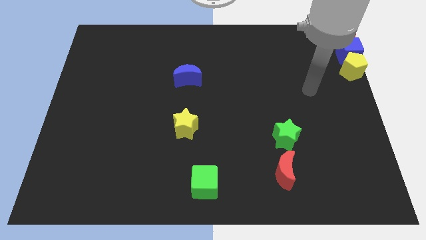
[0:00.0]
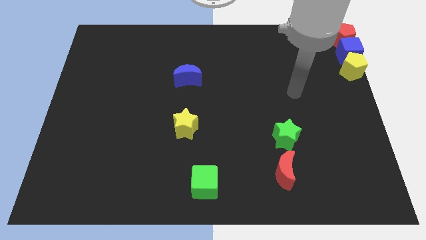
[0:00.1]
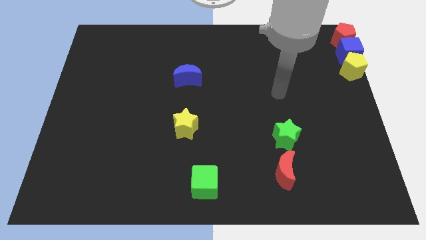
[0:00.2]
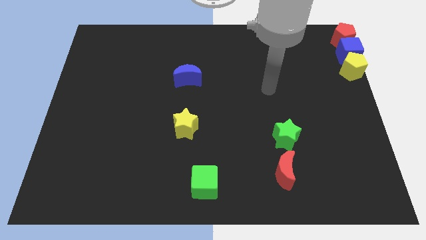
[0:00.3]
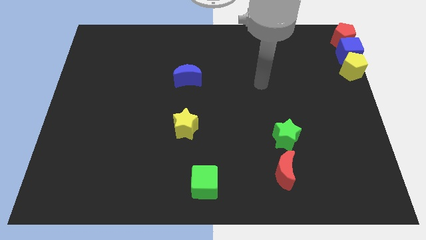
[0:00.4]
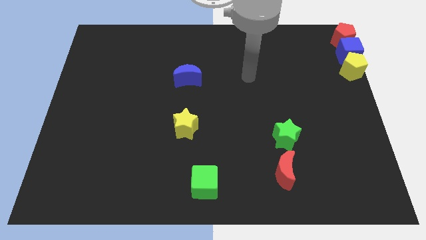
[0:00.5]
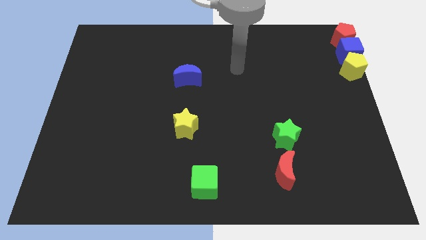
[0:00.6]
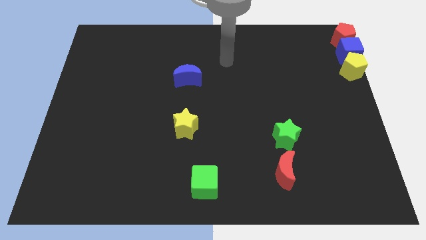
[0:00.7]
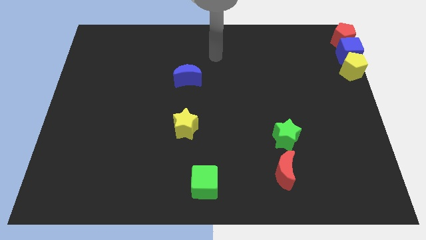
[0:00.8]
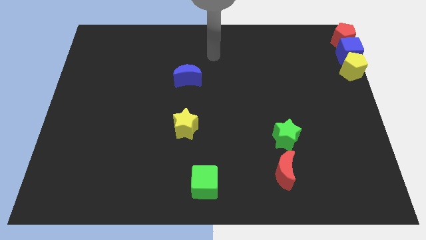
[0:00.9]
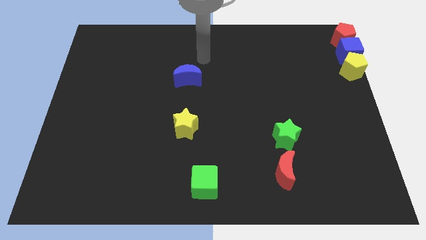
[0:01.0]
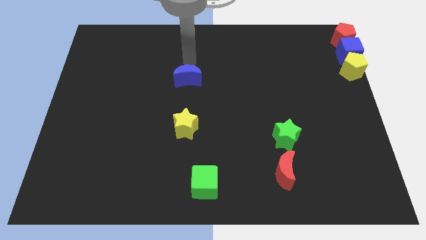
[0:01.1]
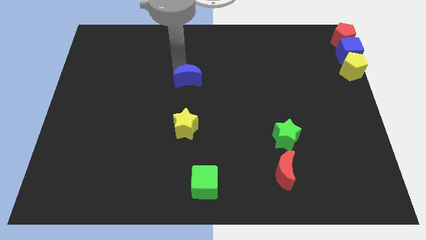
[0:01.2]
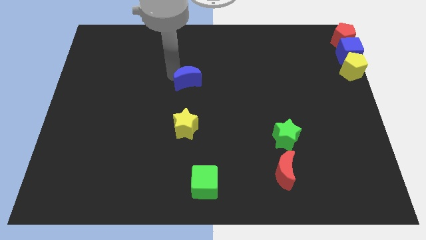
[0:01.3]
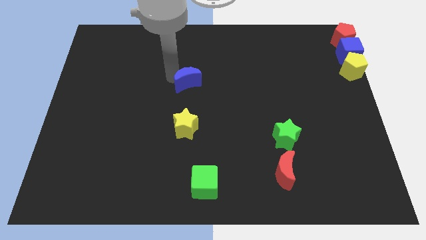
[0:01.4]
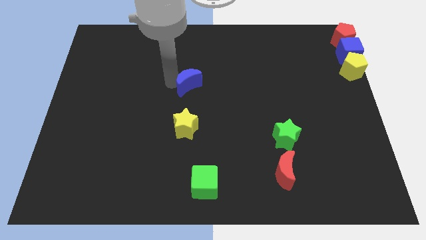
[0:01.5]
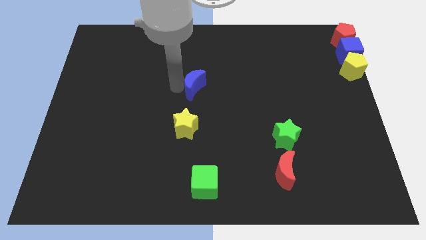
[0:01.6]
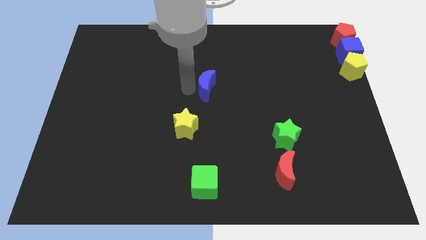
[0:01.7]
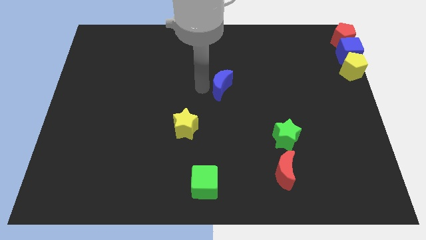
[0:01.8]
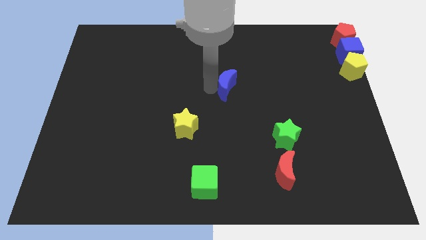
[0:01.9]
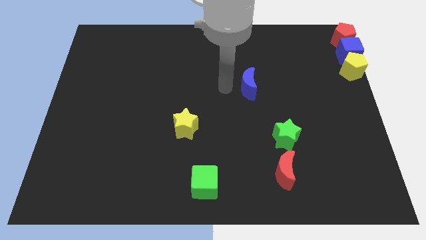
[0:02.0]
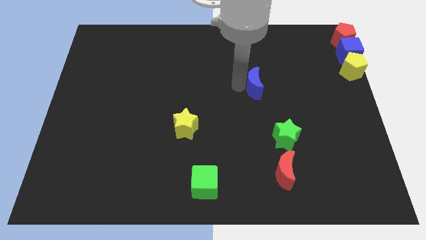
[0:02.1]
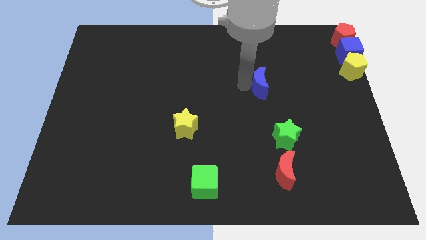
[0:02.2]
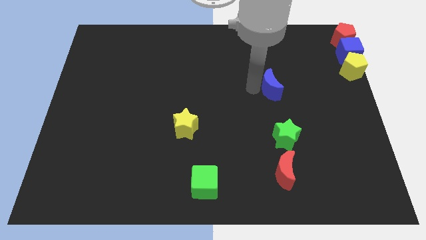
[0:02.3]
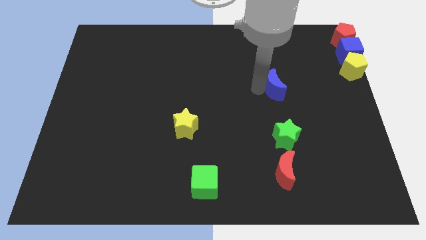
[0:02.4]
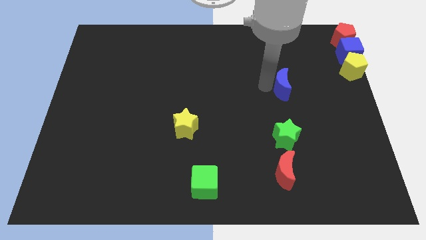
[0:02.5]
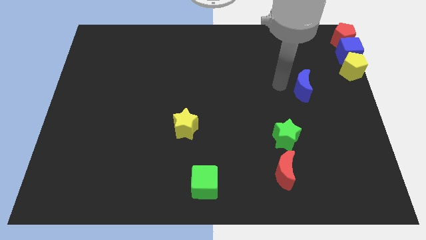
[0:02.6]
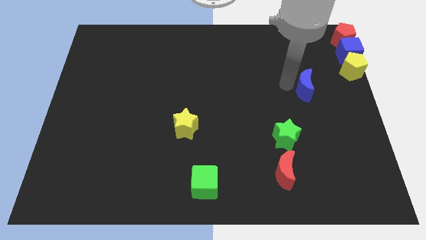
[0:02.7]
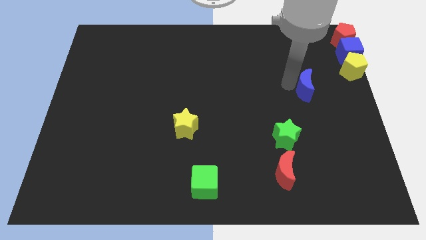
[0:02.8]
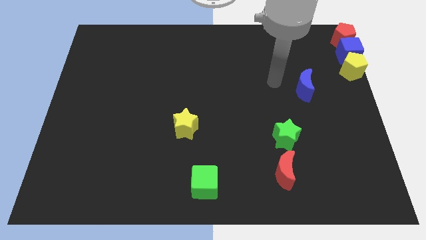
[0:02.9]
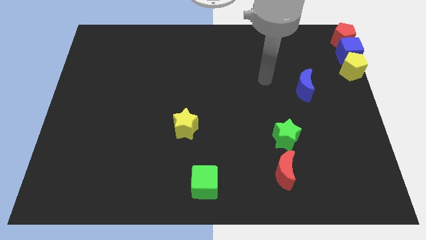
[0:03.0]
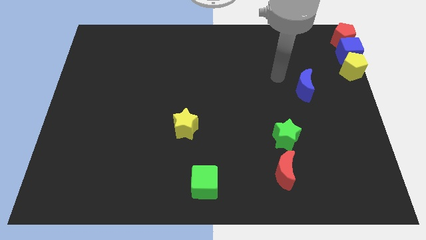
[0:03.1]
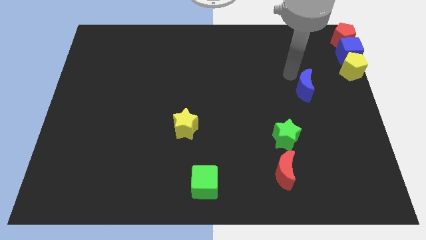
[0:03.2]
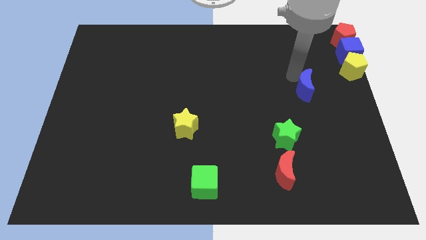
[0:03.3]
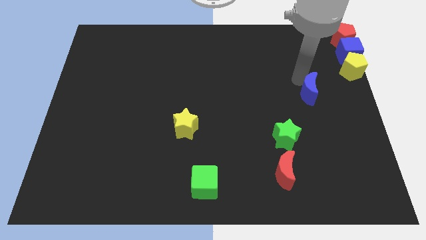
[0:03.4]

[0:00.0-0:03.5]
slide the blue moon to the right

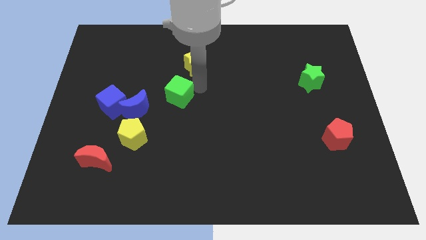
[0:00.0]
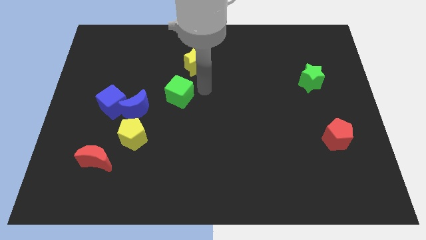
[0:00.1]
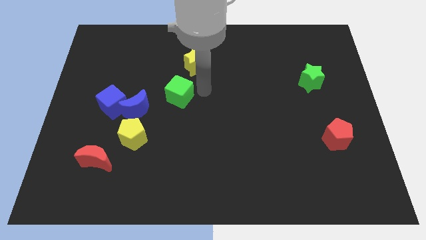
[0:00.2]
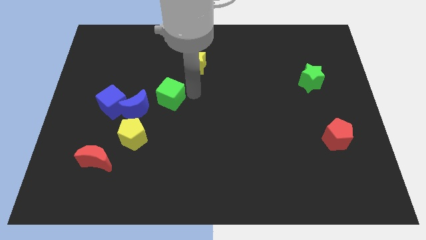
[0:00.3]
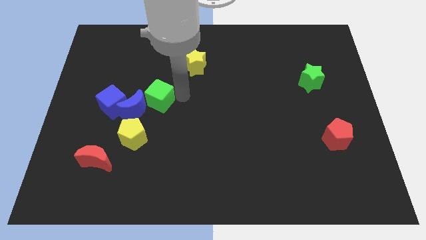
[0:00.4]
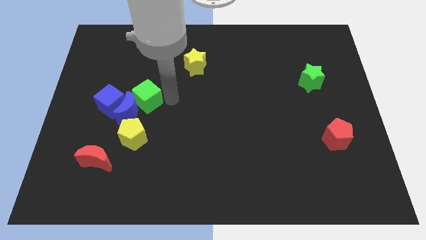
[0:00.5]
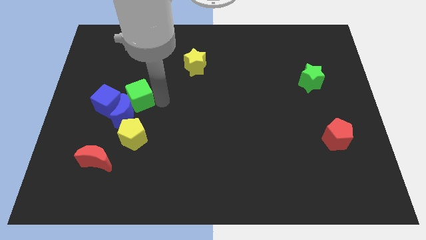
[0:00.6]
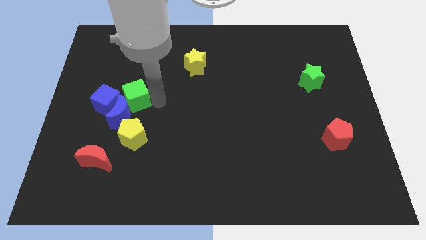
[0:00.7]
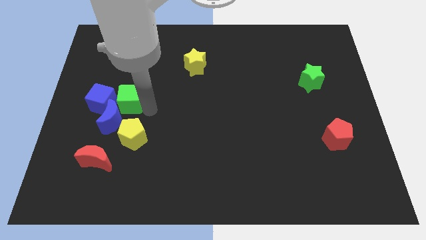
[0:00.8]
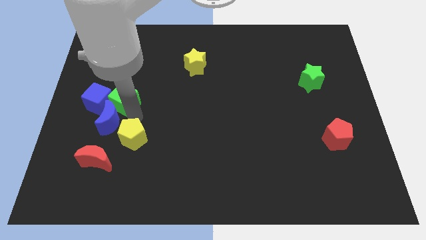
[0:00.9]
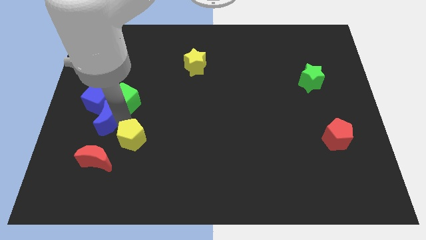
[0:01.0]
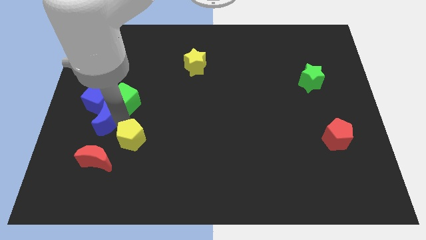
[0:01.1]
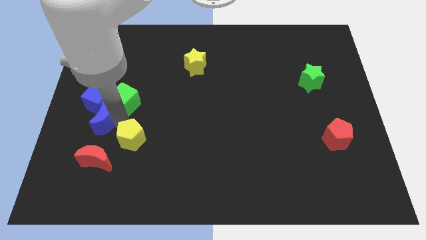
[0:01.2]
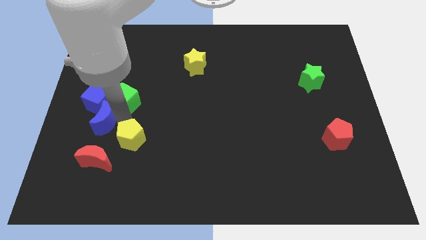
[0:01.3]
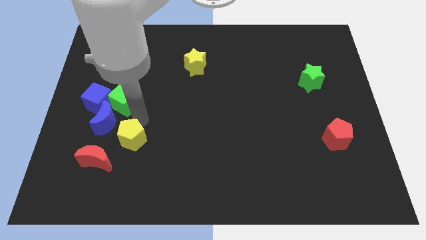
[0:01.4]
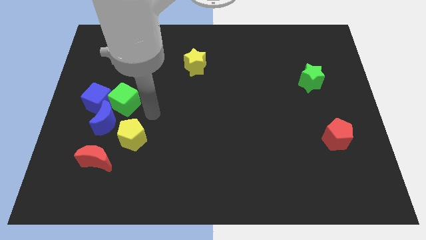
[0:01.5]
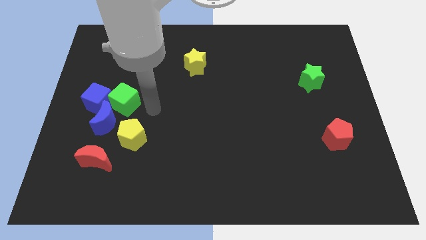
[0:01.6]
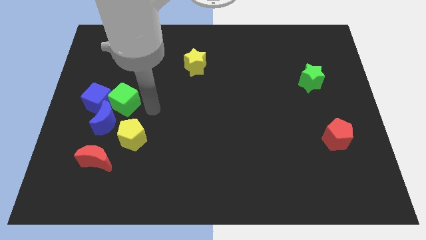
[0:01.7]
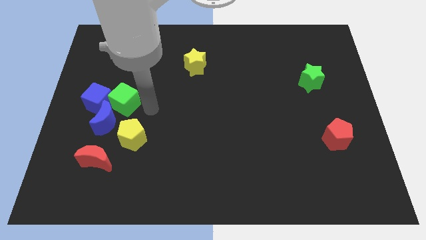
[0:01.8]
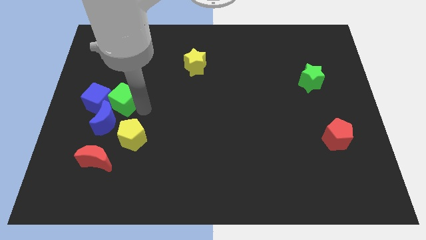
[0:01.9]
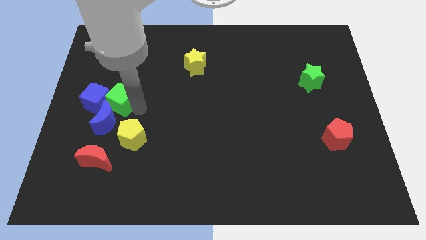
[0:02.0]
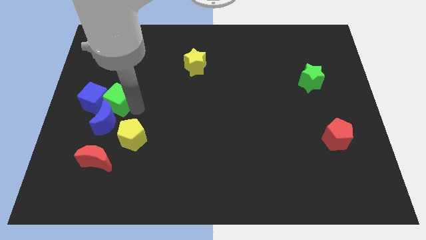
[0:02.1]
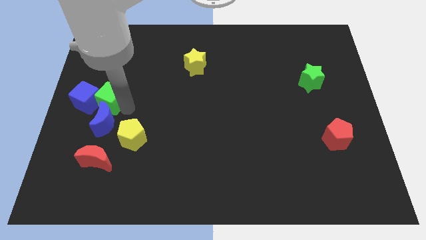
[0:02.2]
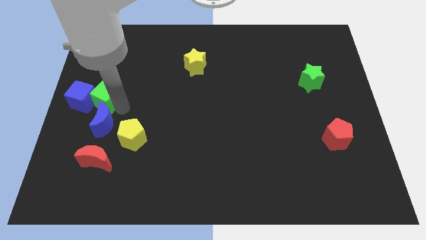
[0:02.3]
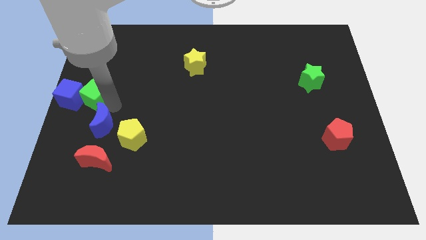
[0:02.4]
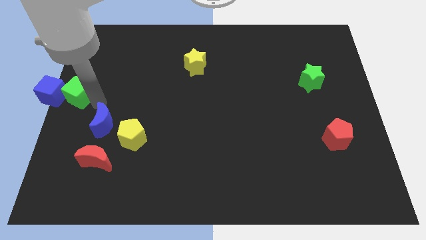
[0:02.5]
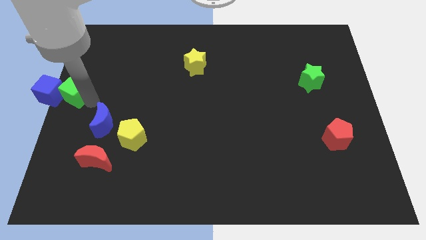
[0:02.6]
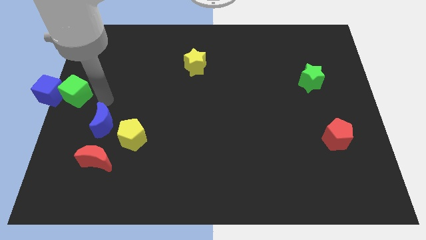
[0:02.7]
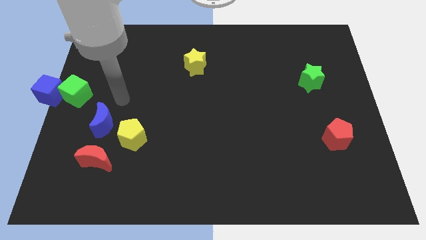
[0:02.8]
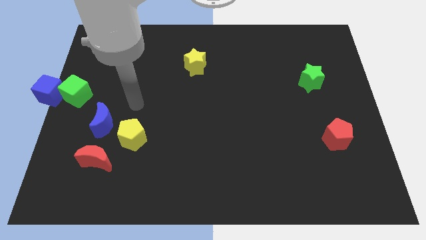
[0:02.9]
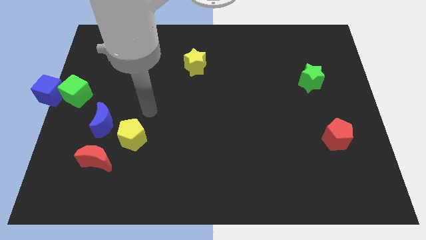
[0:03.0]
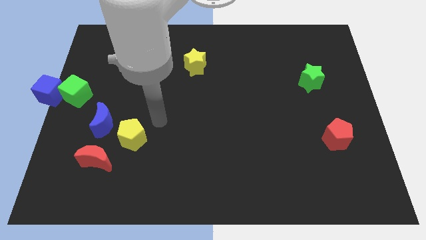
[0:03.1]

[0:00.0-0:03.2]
place the green cube at the left center of the board

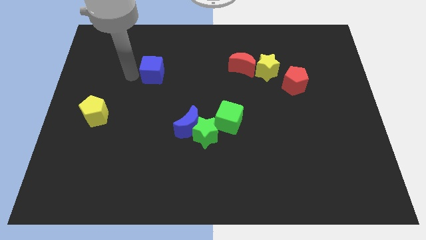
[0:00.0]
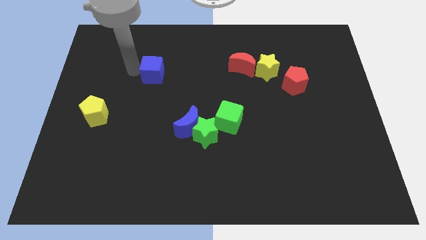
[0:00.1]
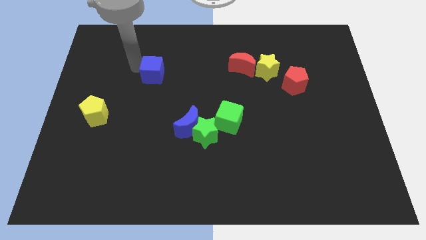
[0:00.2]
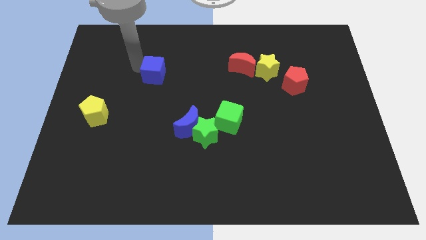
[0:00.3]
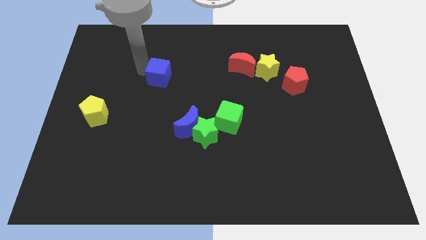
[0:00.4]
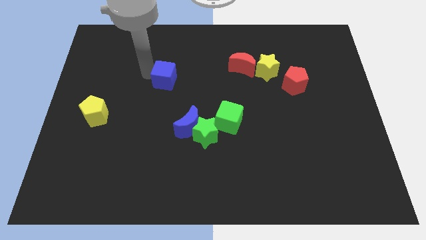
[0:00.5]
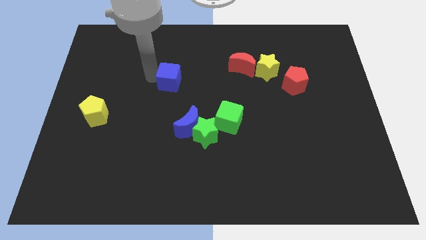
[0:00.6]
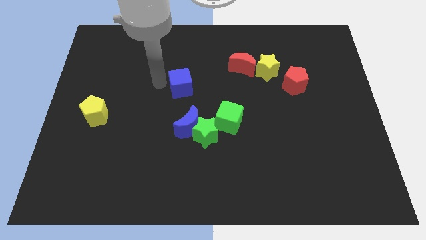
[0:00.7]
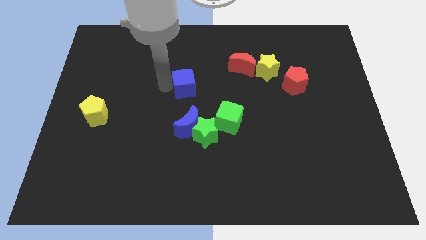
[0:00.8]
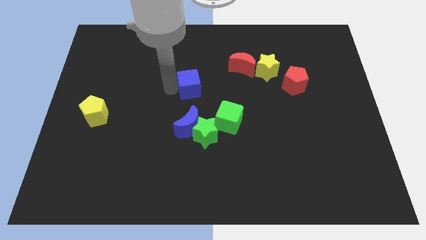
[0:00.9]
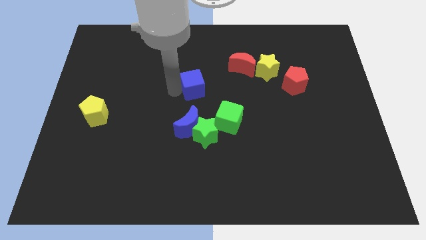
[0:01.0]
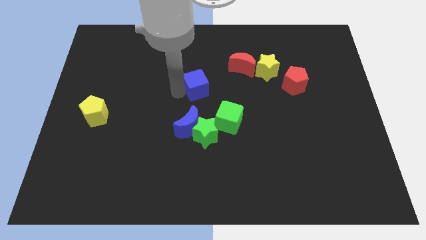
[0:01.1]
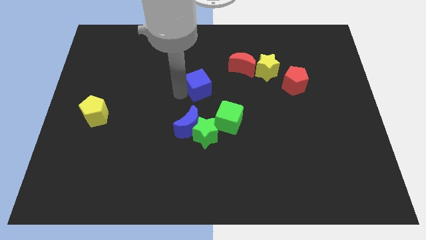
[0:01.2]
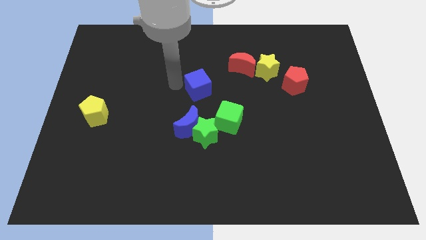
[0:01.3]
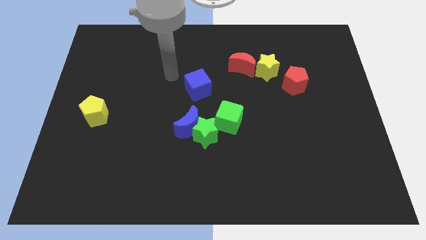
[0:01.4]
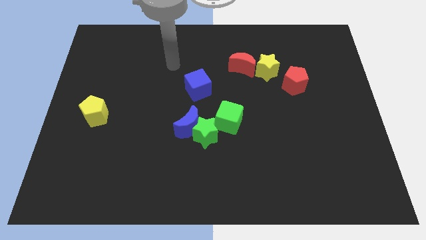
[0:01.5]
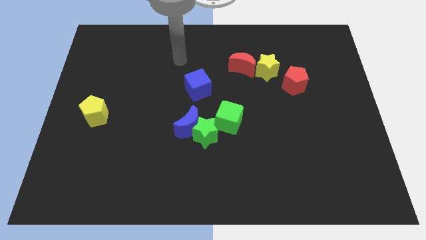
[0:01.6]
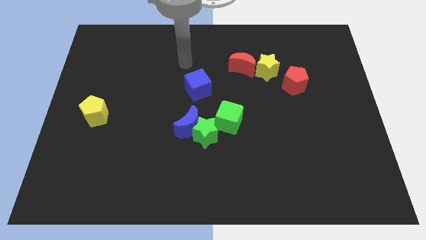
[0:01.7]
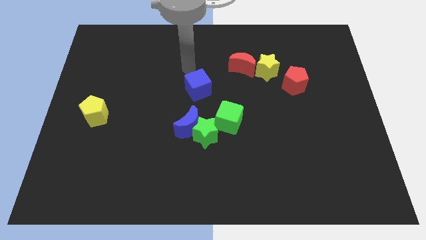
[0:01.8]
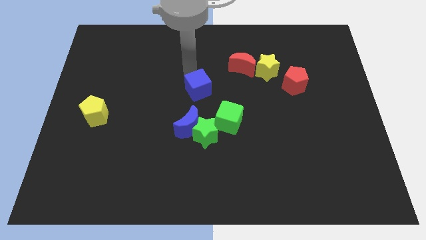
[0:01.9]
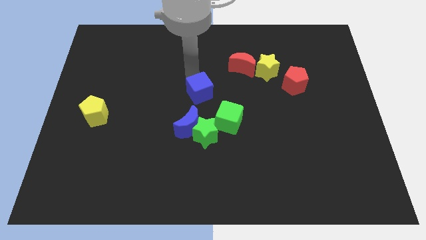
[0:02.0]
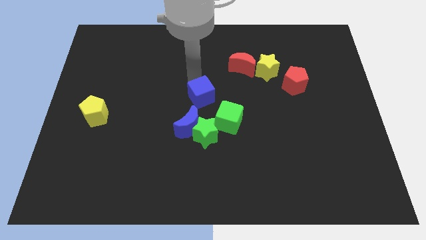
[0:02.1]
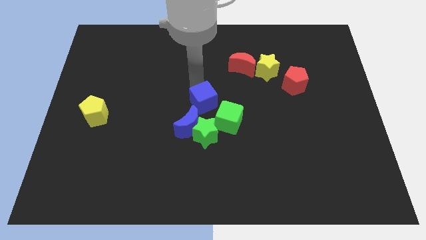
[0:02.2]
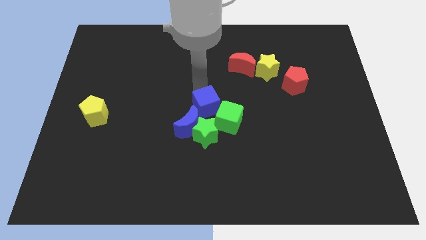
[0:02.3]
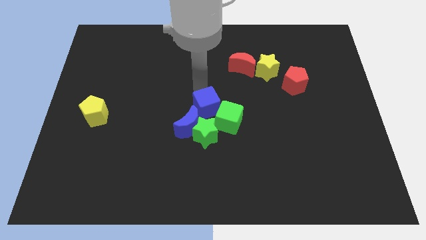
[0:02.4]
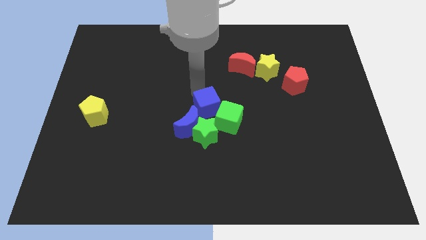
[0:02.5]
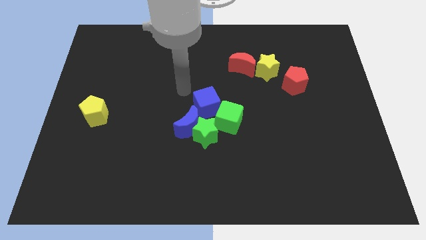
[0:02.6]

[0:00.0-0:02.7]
push the blue cube into group of blocks
